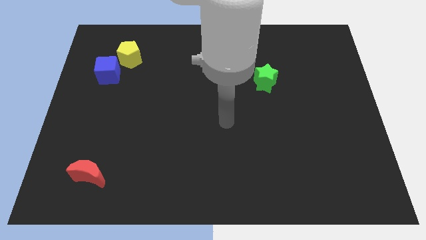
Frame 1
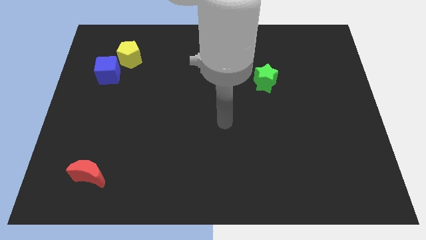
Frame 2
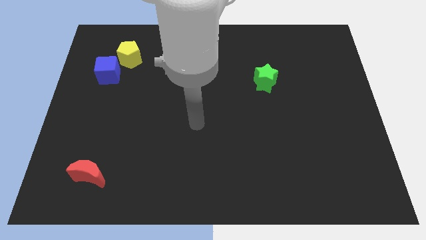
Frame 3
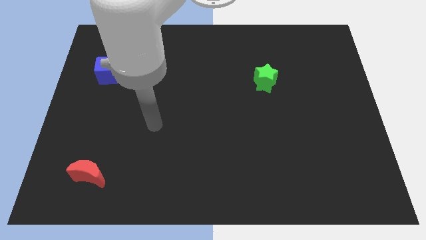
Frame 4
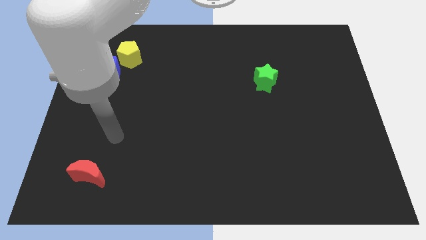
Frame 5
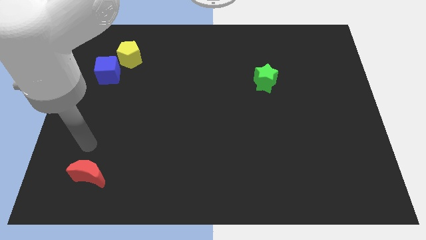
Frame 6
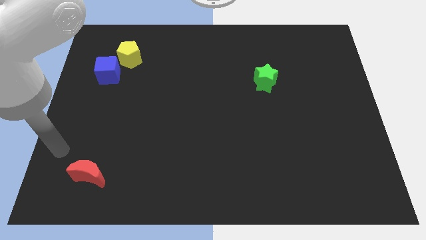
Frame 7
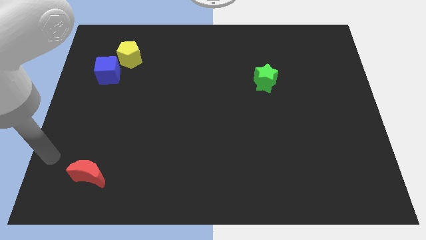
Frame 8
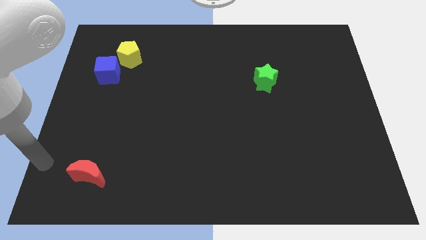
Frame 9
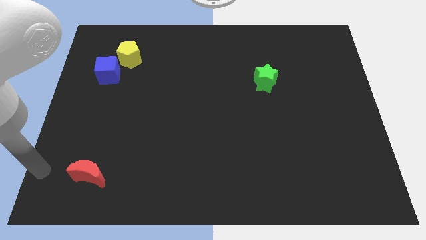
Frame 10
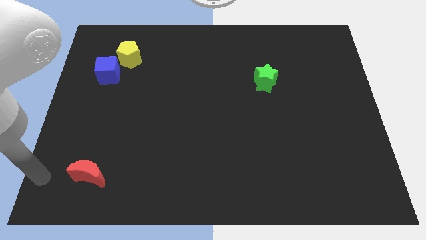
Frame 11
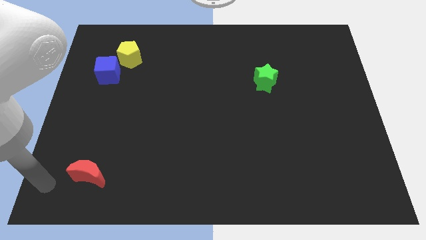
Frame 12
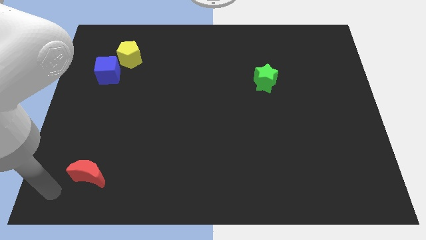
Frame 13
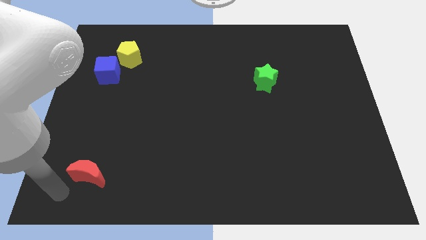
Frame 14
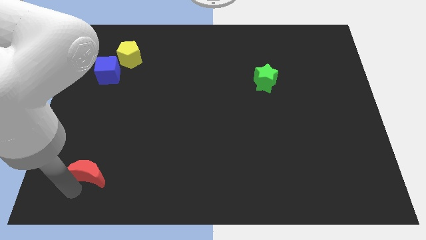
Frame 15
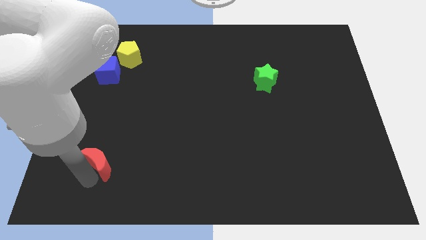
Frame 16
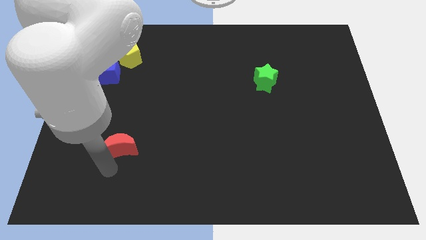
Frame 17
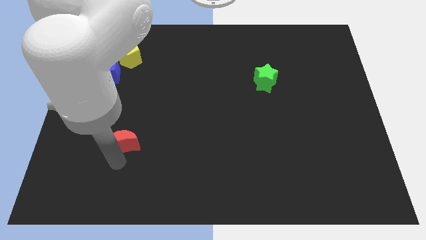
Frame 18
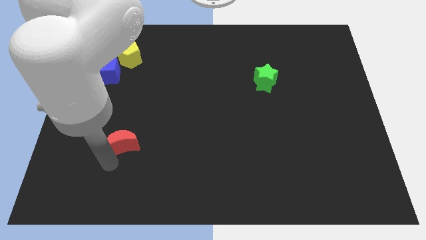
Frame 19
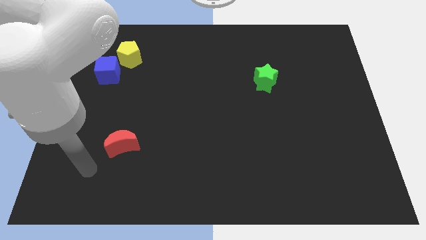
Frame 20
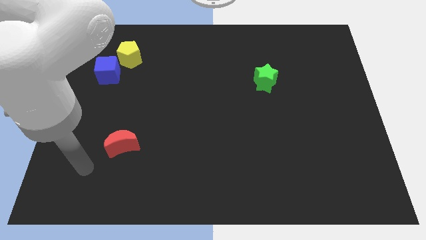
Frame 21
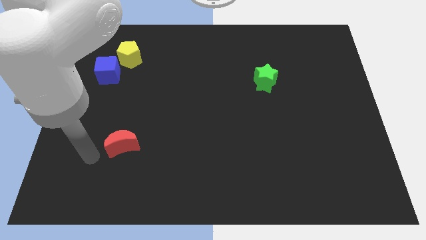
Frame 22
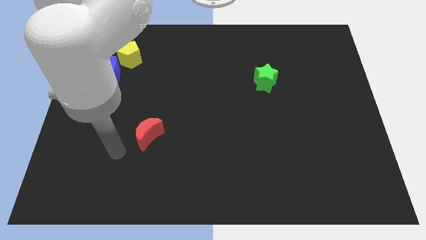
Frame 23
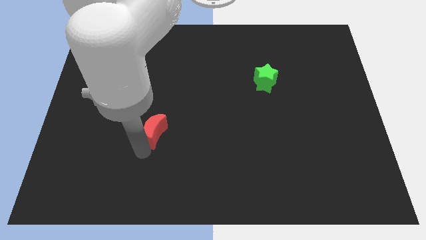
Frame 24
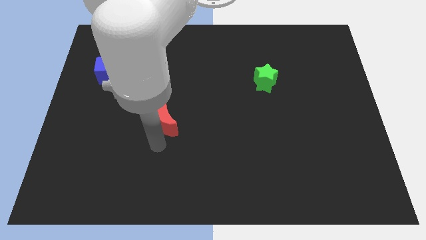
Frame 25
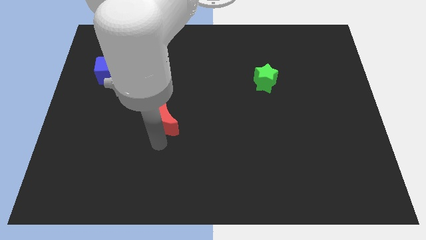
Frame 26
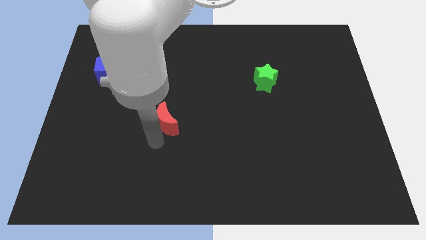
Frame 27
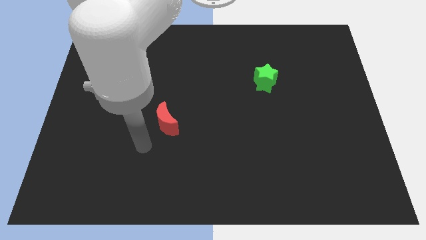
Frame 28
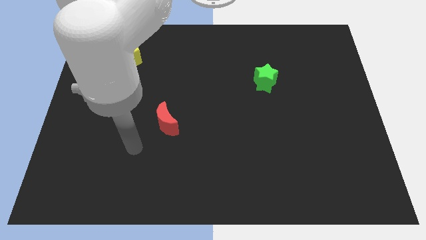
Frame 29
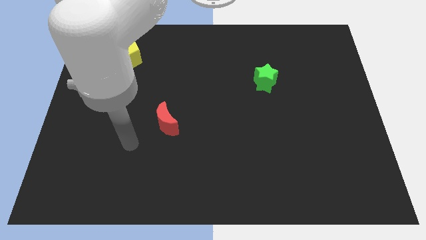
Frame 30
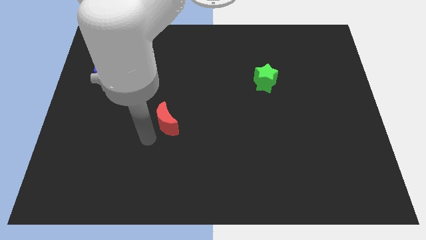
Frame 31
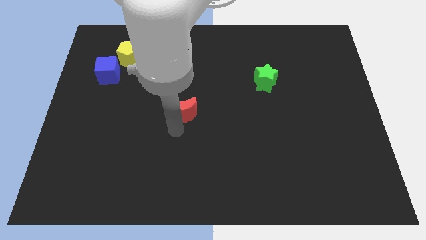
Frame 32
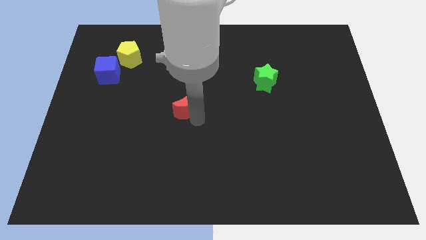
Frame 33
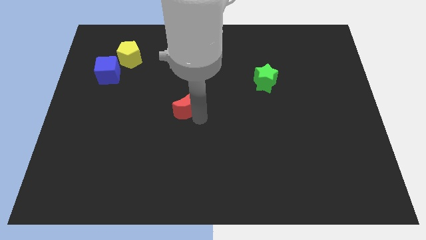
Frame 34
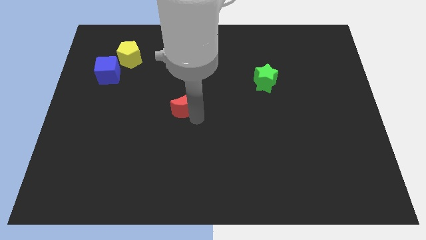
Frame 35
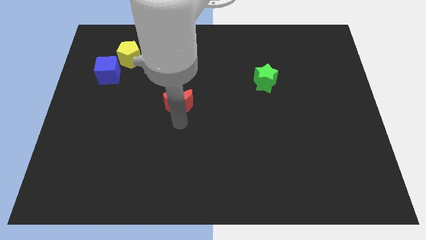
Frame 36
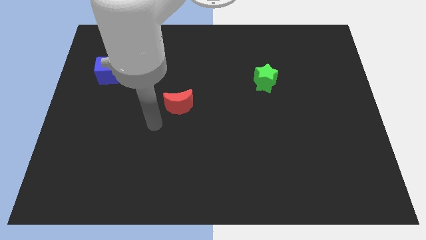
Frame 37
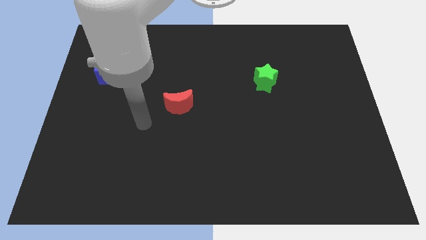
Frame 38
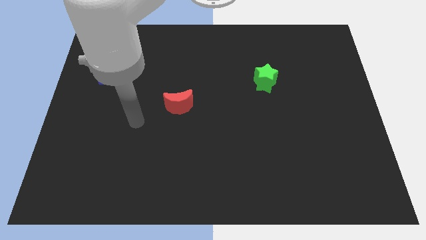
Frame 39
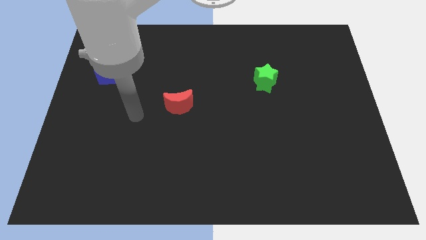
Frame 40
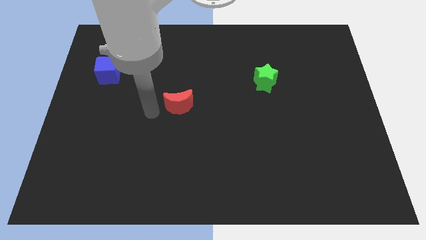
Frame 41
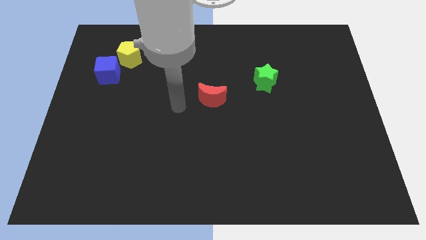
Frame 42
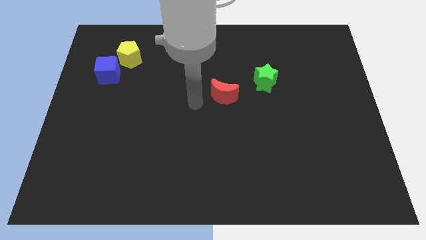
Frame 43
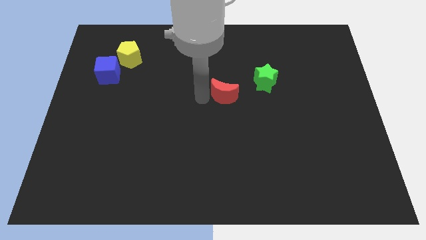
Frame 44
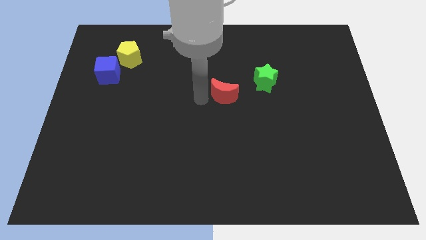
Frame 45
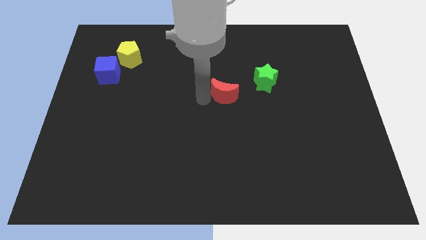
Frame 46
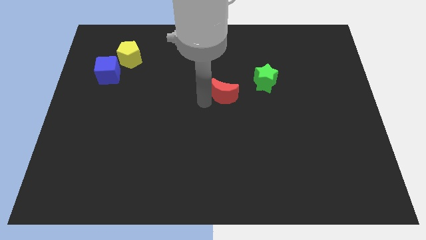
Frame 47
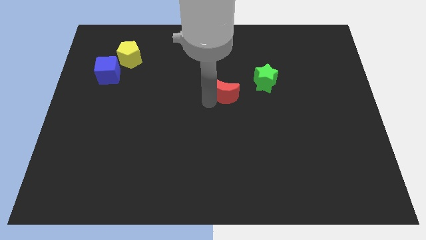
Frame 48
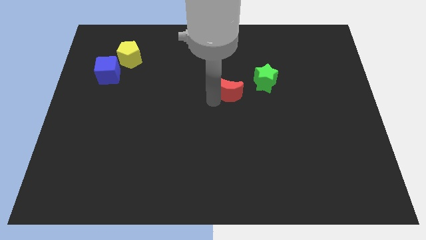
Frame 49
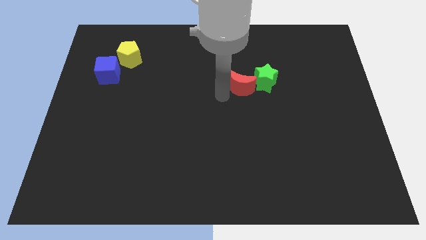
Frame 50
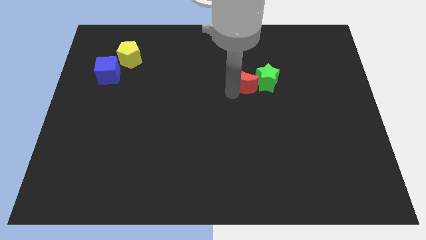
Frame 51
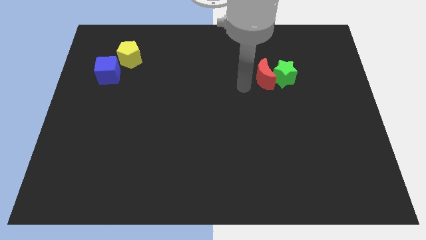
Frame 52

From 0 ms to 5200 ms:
move the red moon close to the green star

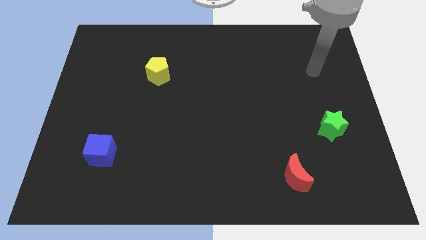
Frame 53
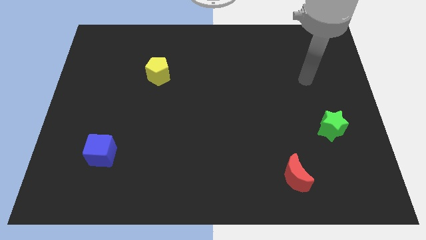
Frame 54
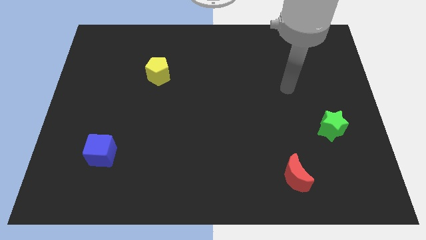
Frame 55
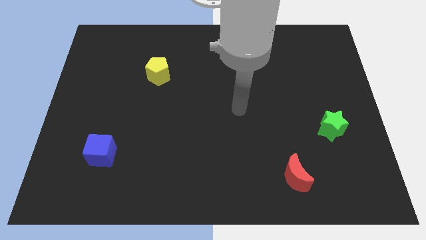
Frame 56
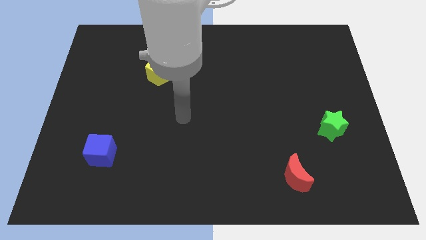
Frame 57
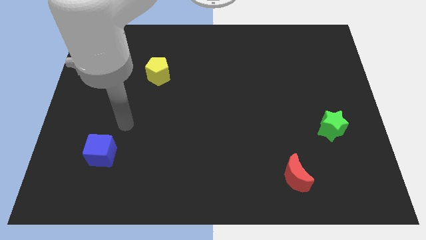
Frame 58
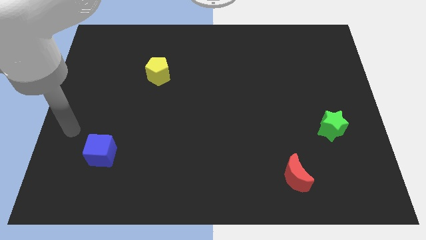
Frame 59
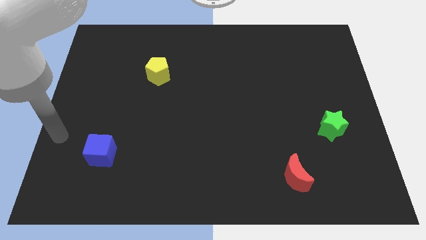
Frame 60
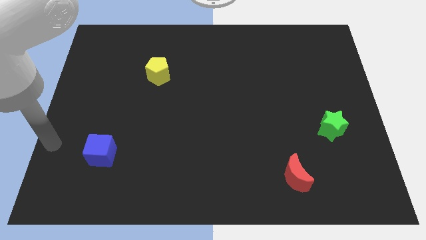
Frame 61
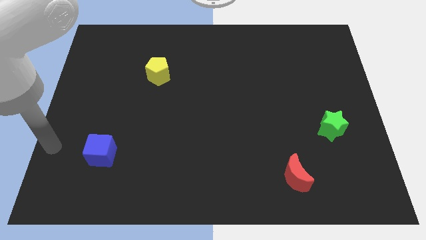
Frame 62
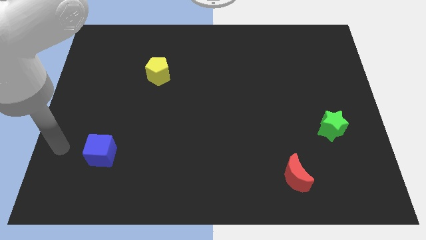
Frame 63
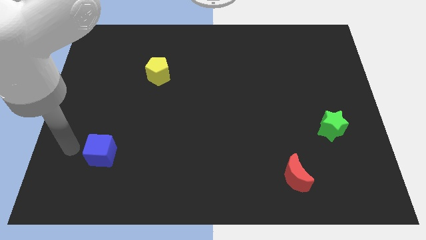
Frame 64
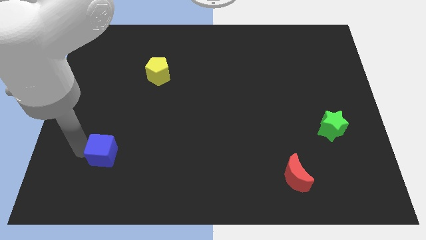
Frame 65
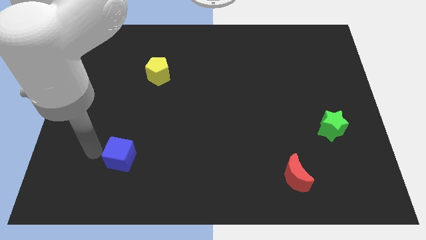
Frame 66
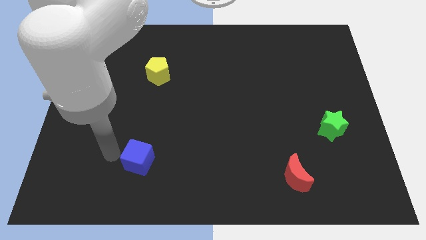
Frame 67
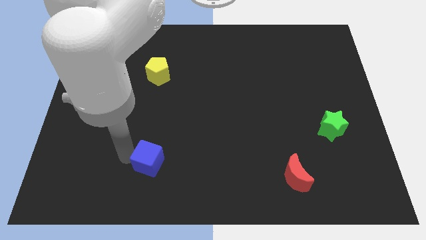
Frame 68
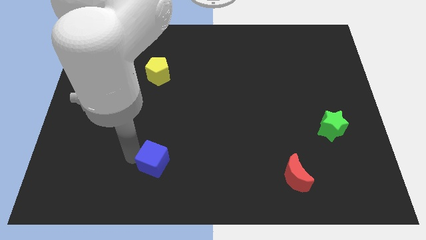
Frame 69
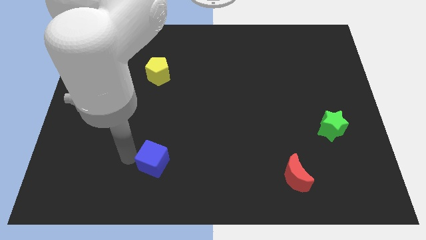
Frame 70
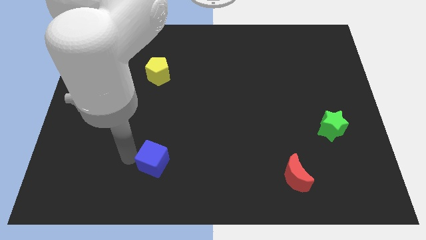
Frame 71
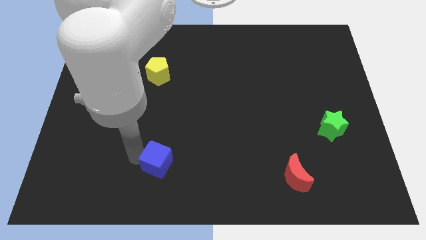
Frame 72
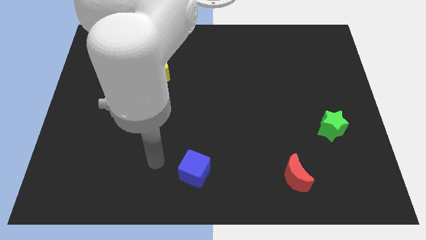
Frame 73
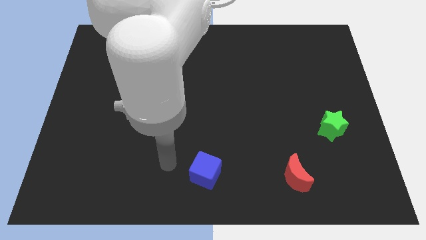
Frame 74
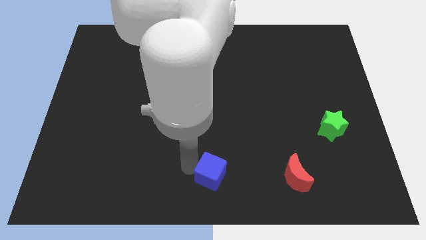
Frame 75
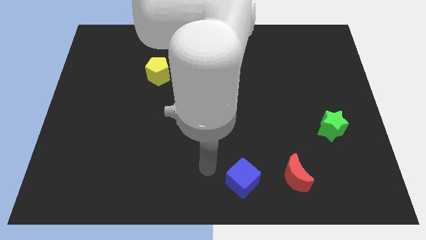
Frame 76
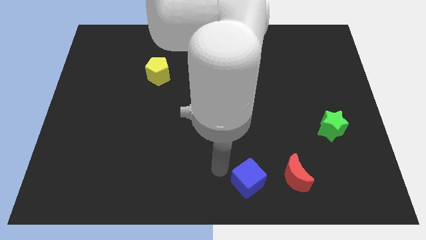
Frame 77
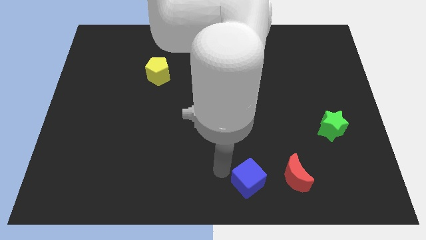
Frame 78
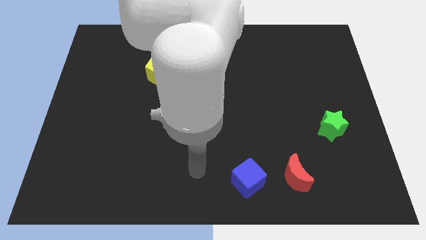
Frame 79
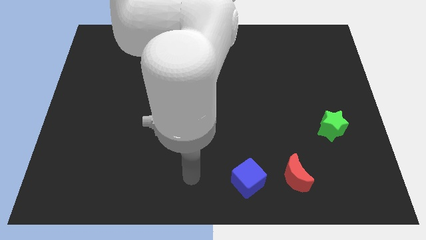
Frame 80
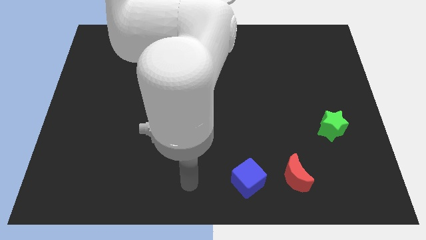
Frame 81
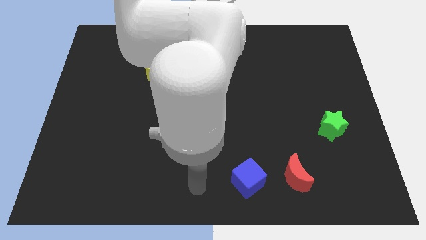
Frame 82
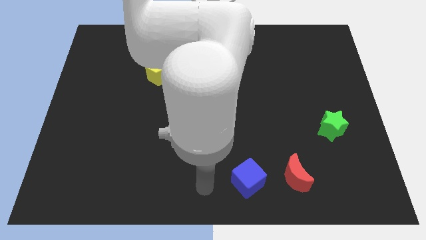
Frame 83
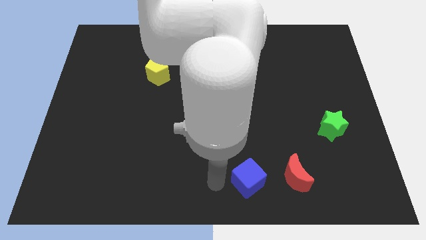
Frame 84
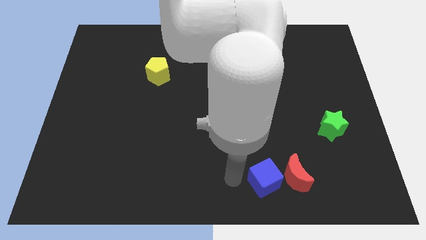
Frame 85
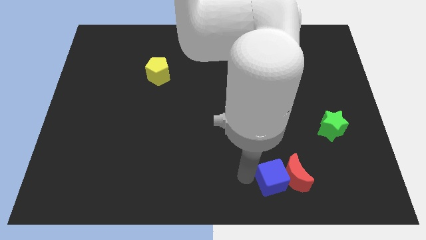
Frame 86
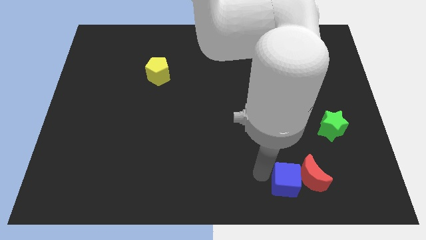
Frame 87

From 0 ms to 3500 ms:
move the blue block to the red moon
